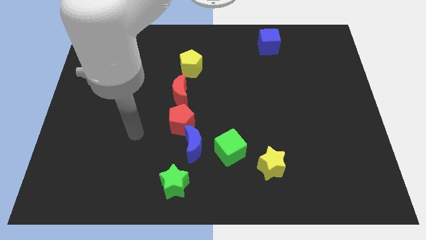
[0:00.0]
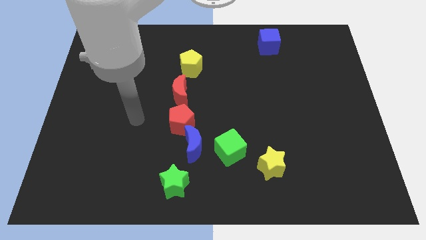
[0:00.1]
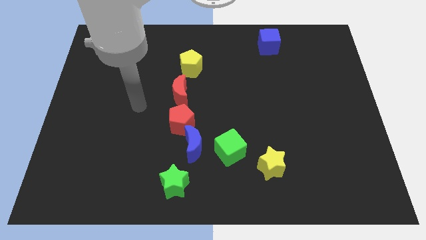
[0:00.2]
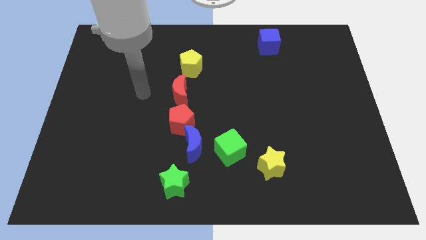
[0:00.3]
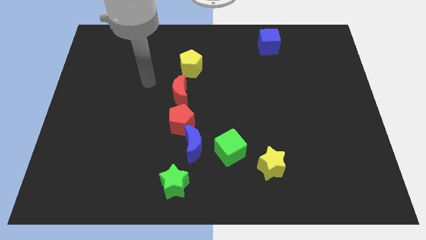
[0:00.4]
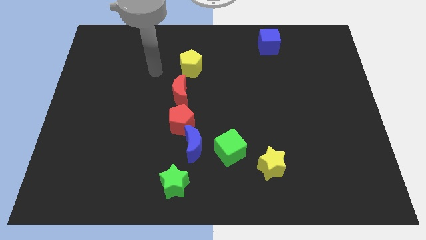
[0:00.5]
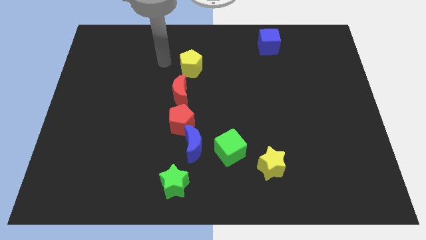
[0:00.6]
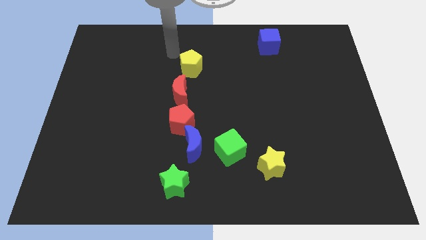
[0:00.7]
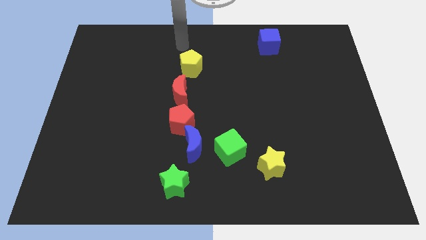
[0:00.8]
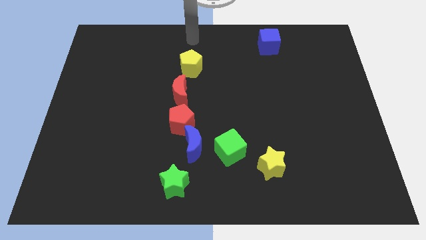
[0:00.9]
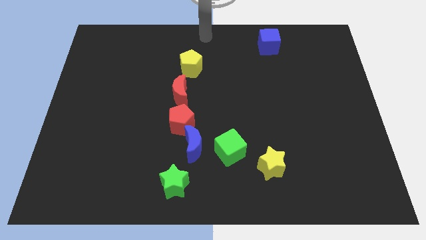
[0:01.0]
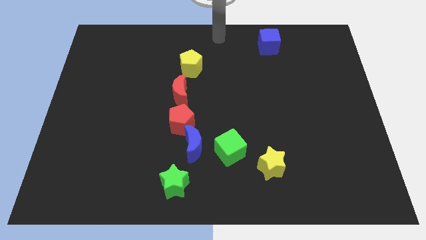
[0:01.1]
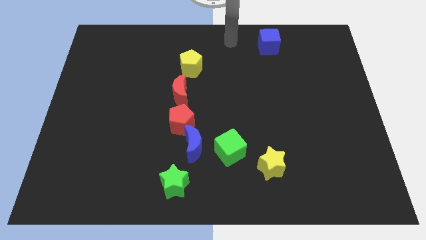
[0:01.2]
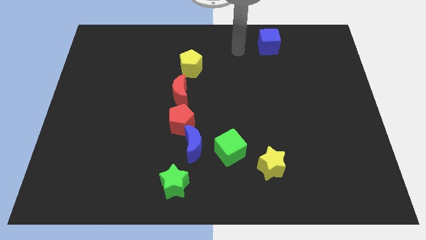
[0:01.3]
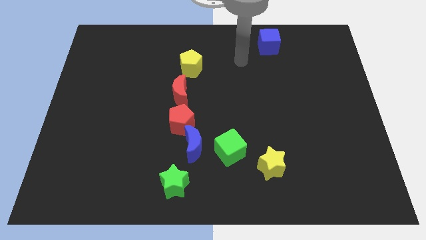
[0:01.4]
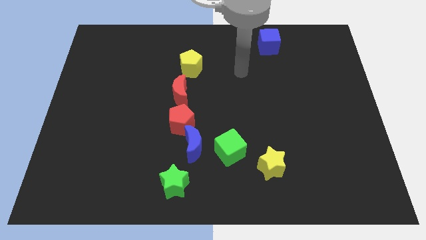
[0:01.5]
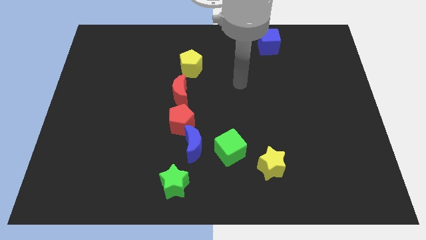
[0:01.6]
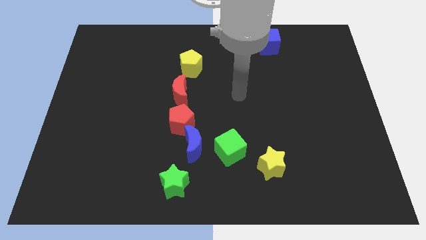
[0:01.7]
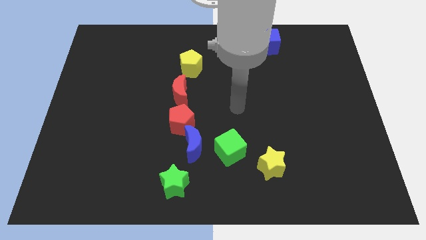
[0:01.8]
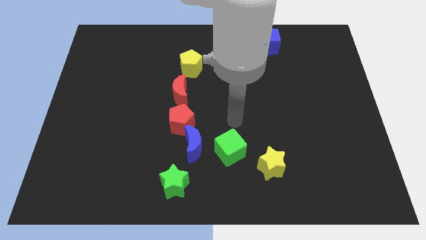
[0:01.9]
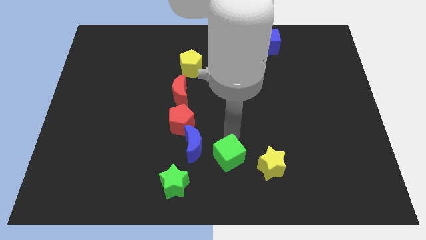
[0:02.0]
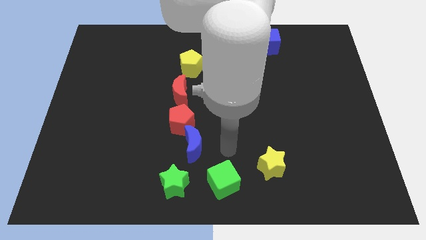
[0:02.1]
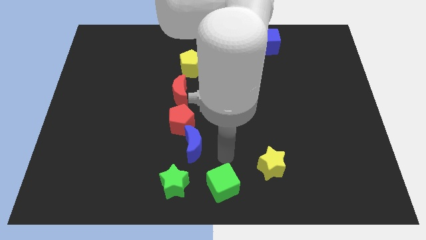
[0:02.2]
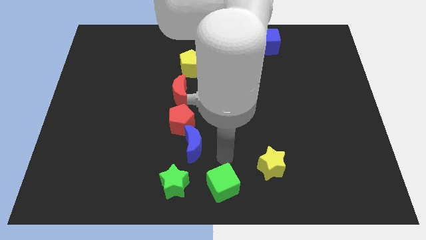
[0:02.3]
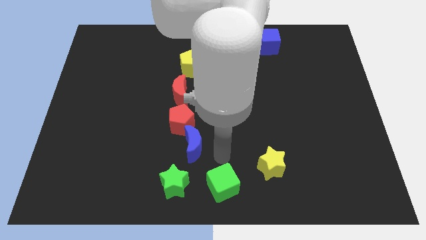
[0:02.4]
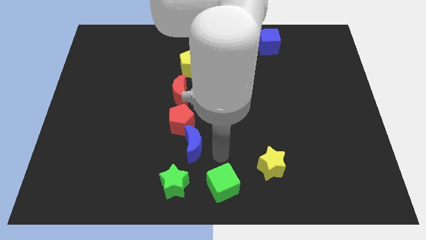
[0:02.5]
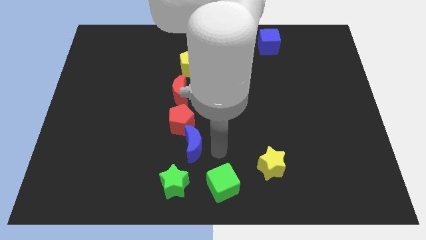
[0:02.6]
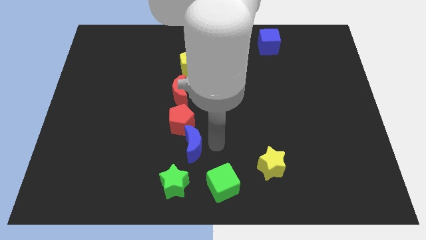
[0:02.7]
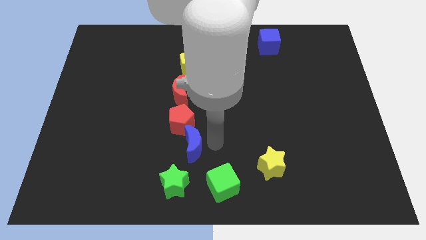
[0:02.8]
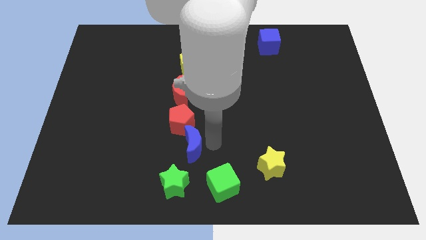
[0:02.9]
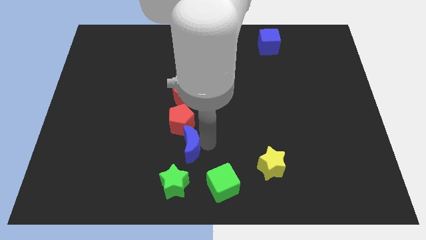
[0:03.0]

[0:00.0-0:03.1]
move green cube to the bottom center of the board

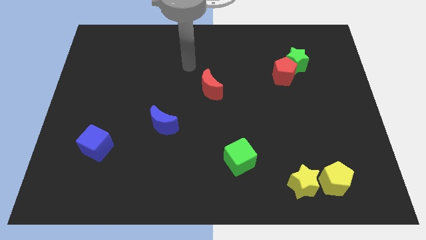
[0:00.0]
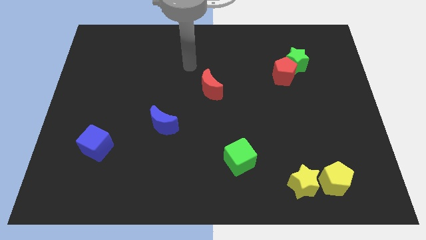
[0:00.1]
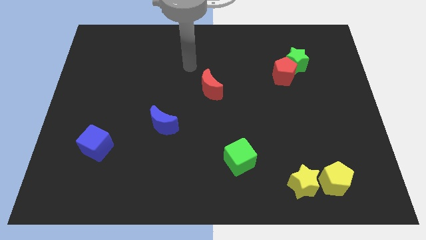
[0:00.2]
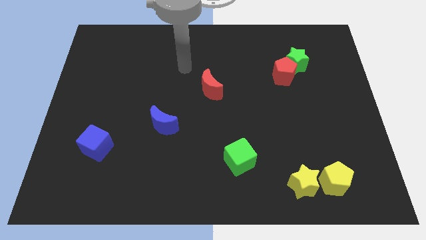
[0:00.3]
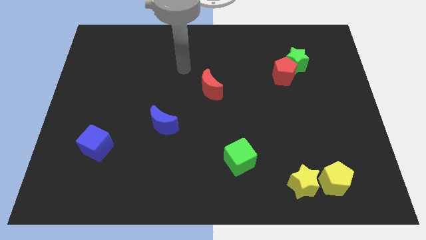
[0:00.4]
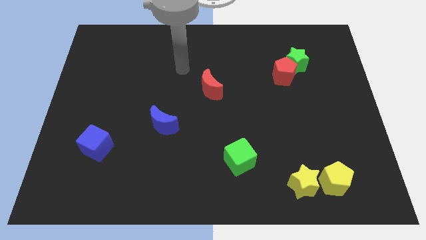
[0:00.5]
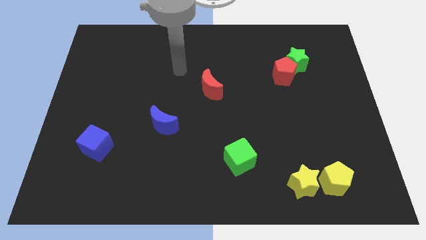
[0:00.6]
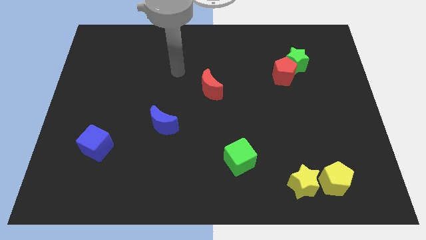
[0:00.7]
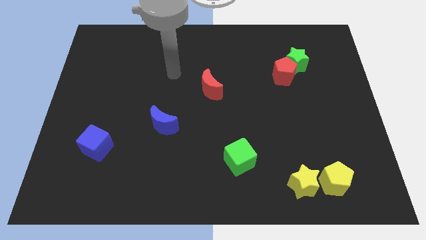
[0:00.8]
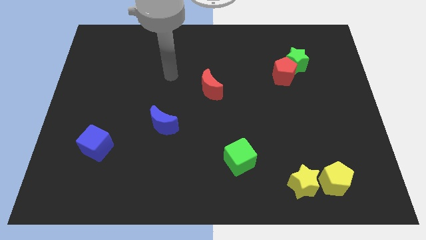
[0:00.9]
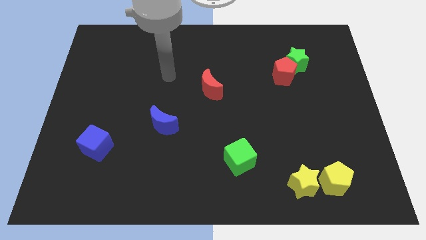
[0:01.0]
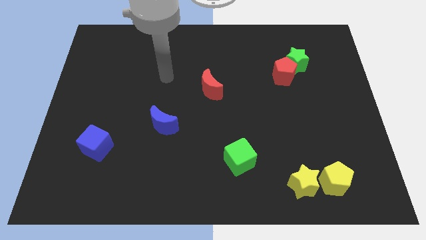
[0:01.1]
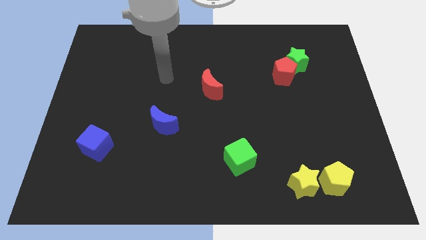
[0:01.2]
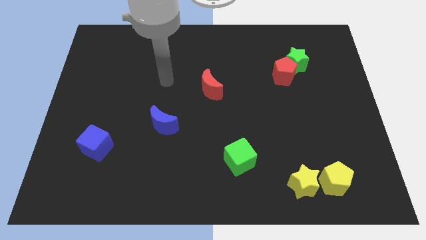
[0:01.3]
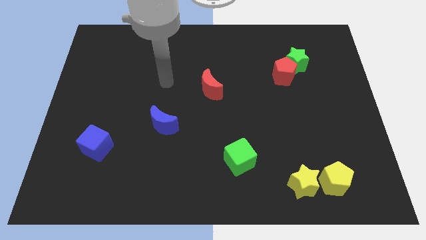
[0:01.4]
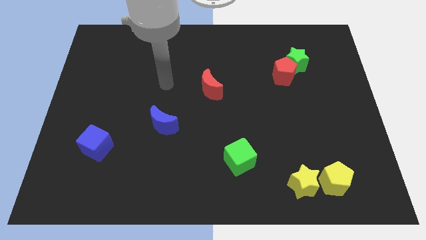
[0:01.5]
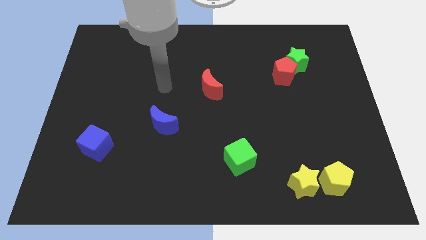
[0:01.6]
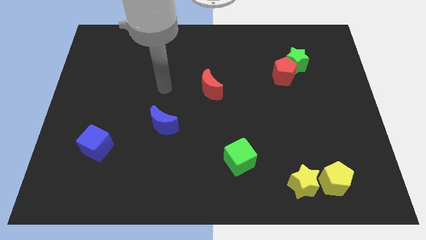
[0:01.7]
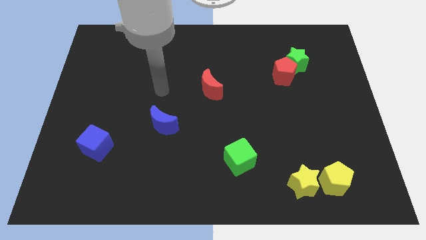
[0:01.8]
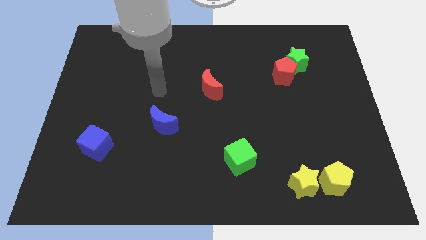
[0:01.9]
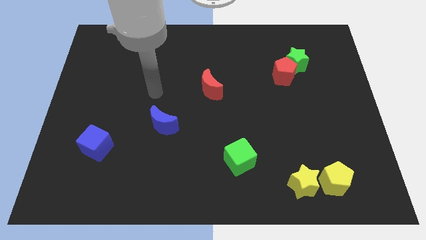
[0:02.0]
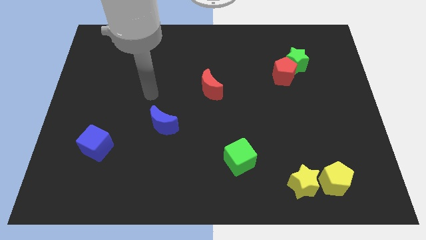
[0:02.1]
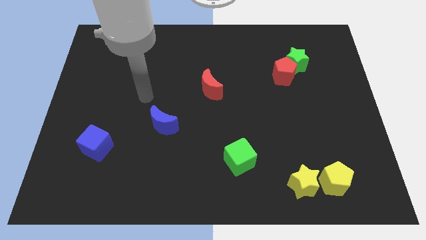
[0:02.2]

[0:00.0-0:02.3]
move the arm near to the blue crescent

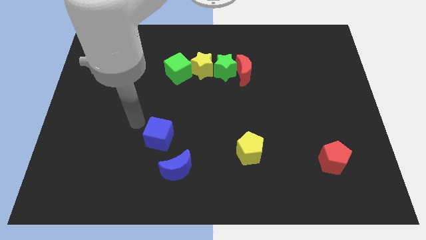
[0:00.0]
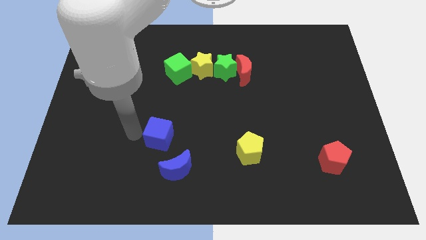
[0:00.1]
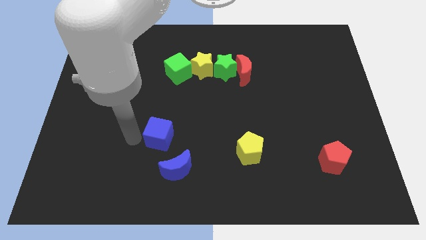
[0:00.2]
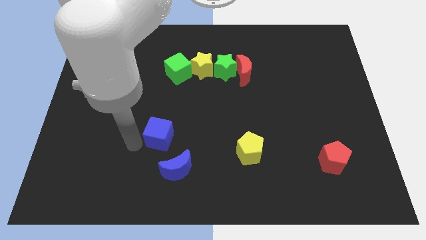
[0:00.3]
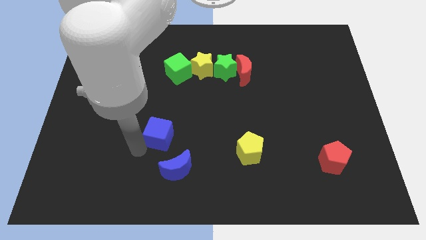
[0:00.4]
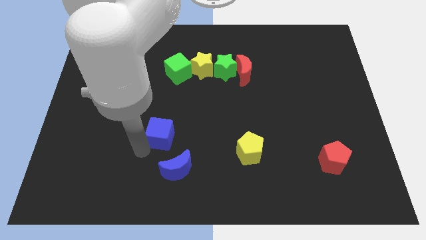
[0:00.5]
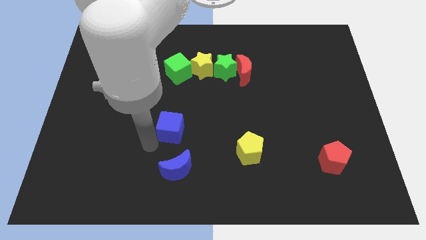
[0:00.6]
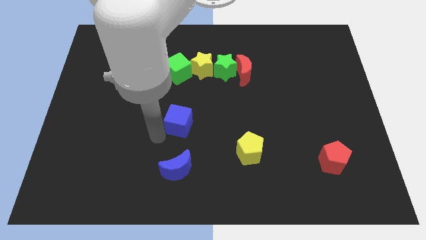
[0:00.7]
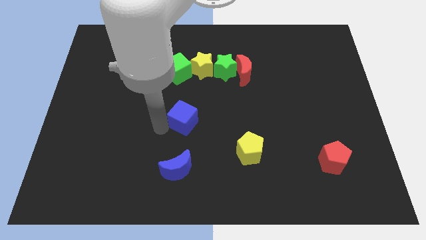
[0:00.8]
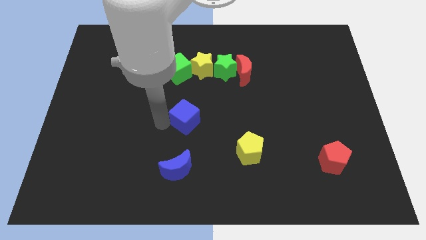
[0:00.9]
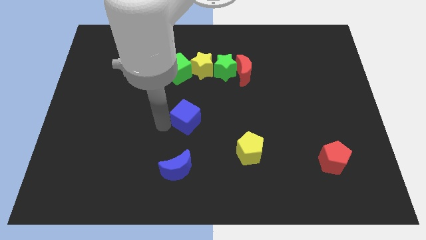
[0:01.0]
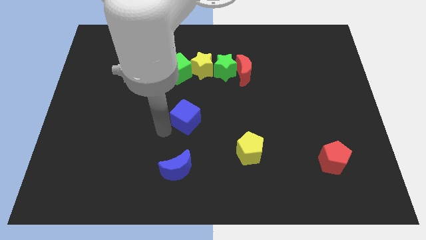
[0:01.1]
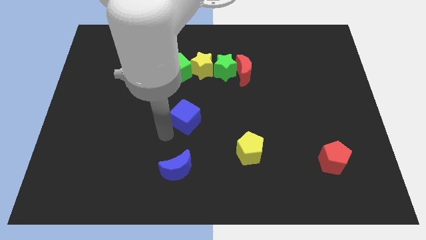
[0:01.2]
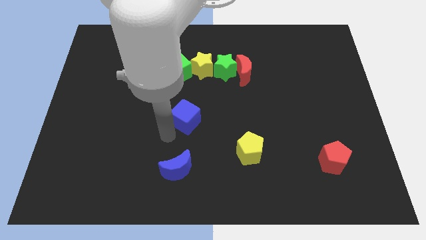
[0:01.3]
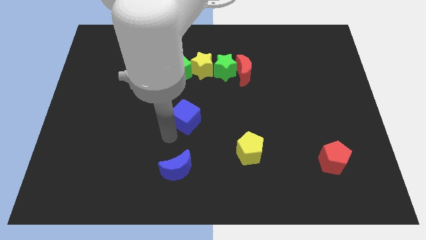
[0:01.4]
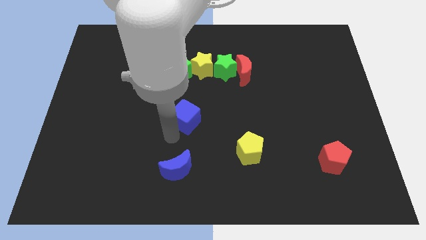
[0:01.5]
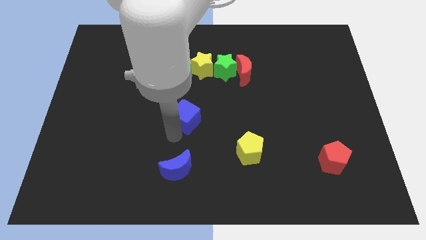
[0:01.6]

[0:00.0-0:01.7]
place the blue cube below the green cube

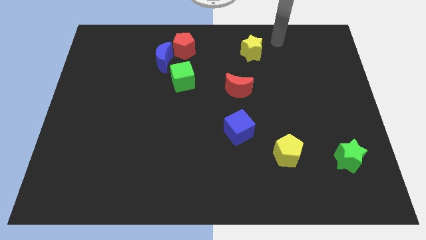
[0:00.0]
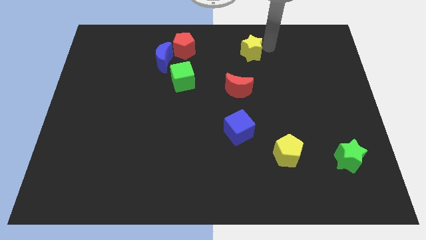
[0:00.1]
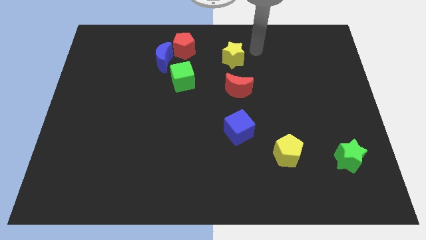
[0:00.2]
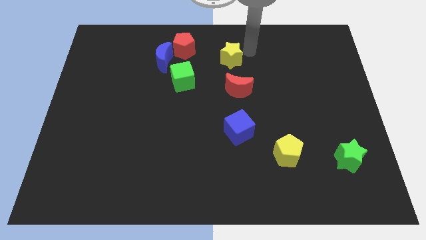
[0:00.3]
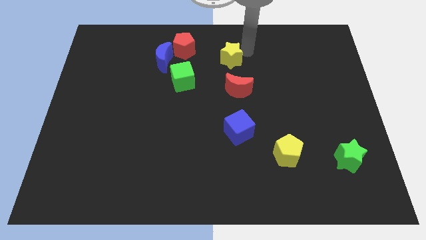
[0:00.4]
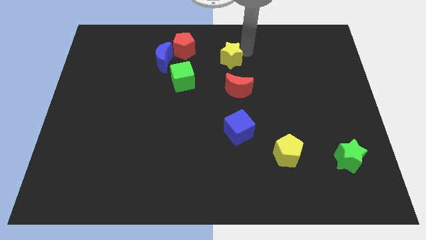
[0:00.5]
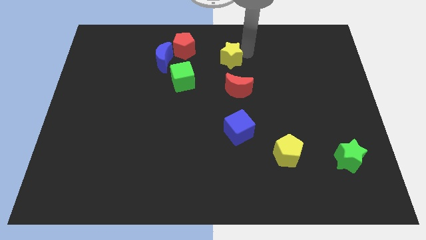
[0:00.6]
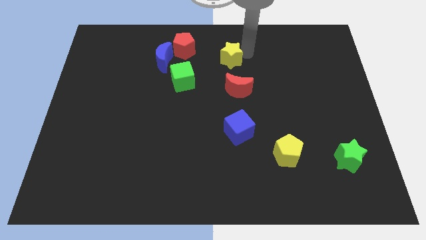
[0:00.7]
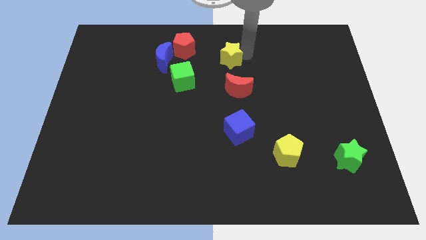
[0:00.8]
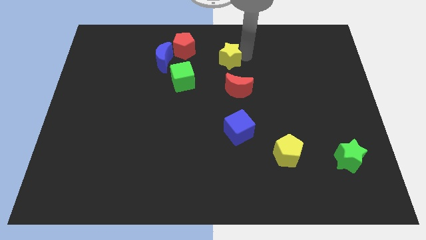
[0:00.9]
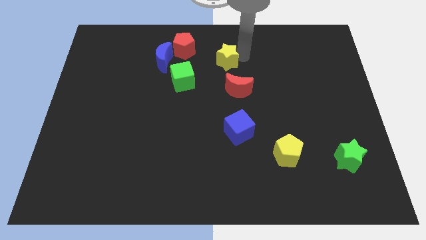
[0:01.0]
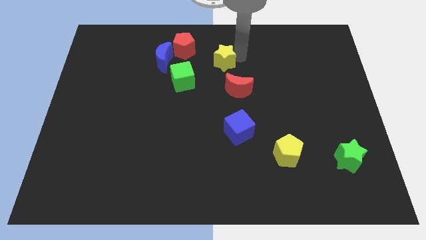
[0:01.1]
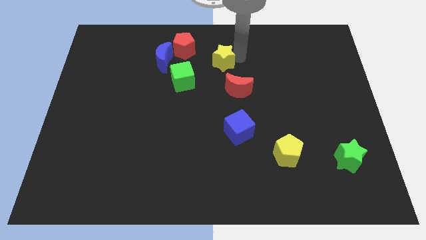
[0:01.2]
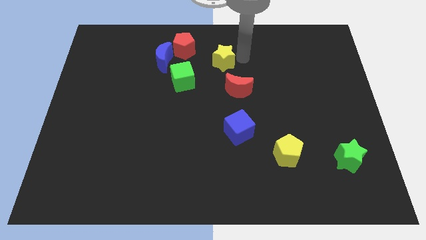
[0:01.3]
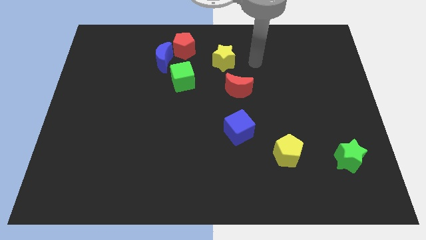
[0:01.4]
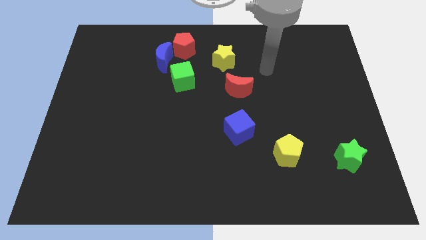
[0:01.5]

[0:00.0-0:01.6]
slide the yellow star diagonally top left to the red moon

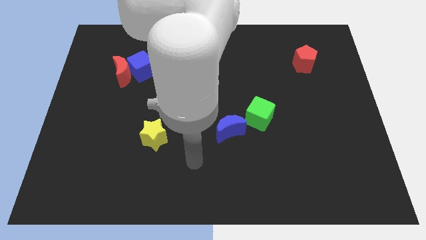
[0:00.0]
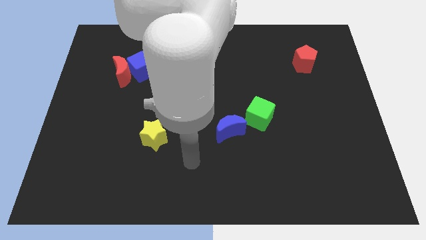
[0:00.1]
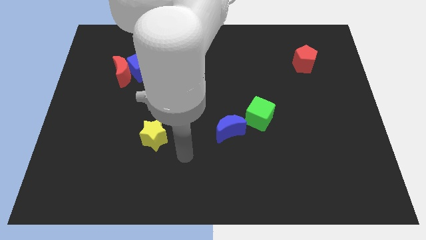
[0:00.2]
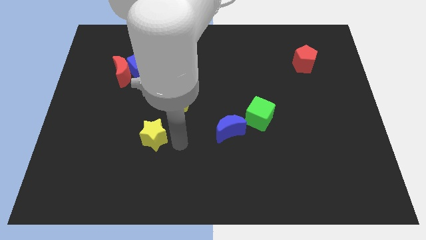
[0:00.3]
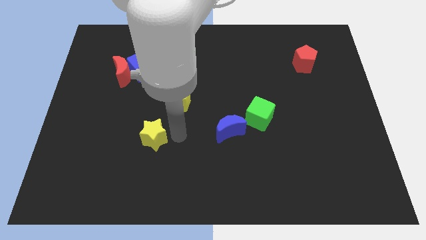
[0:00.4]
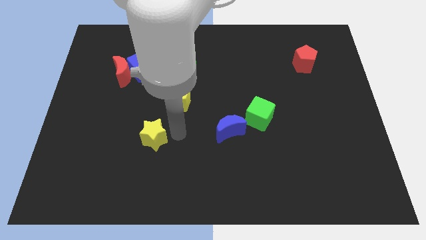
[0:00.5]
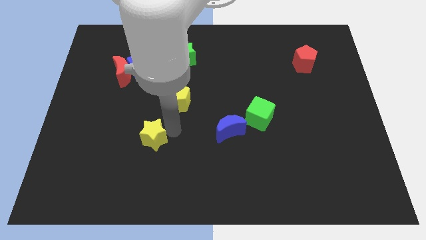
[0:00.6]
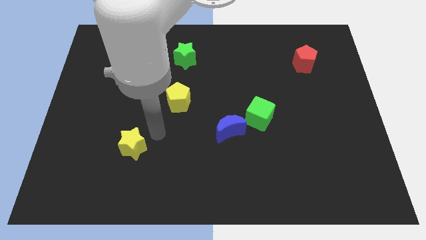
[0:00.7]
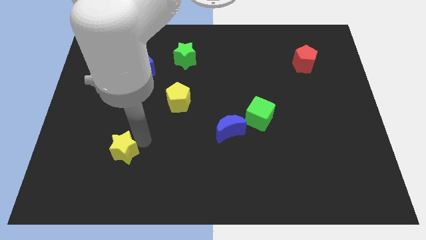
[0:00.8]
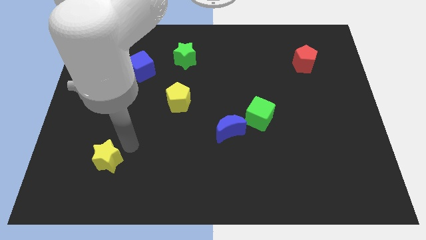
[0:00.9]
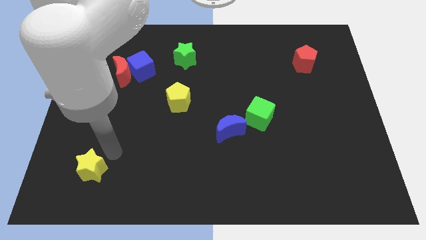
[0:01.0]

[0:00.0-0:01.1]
move the yellow star towards bottom left side of the board
